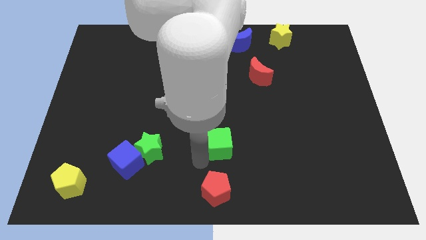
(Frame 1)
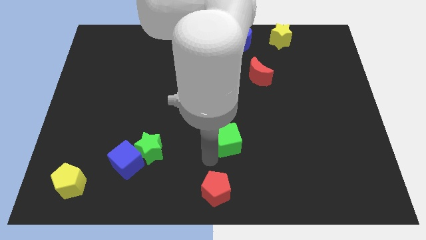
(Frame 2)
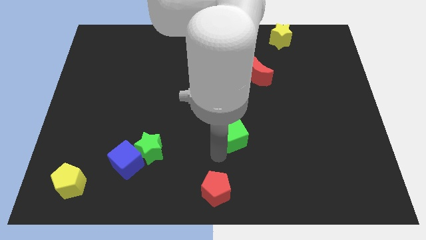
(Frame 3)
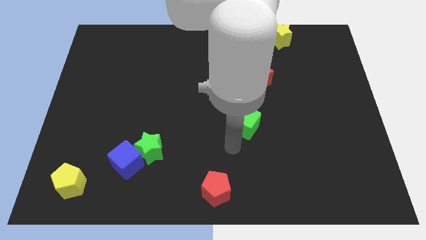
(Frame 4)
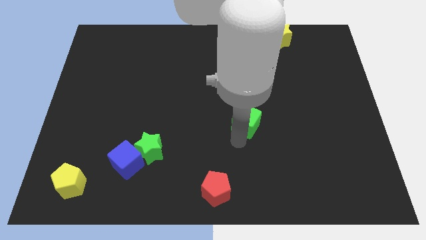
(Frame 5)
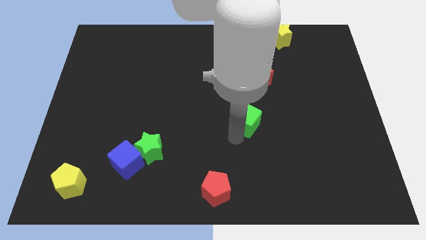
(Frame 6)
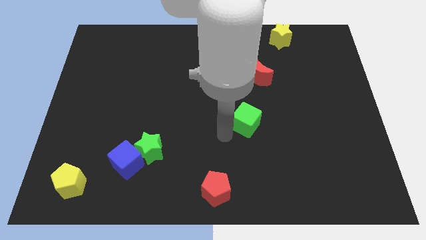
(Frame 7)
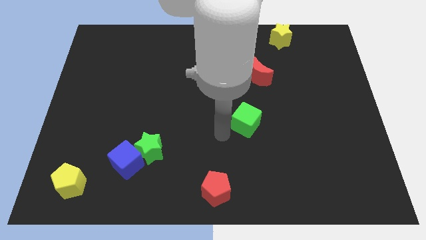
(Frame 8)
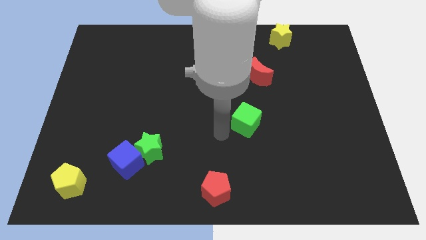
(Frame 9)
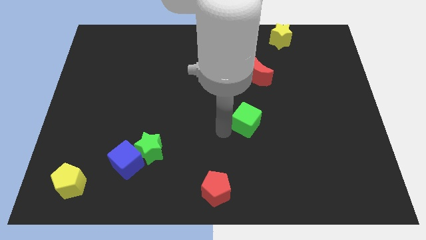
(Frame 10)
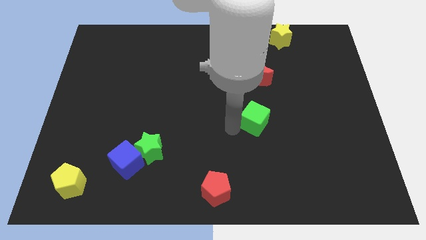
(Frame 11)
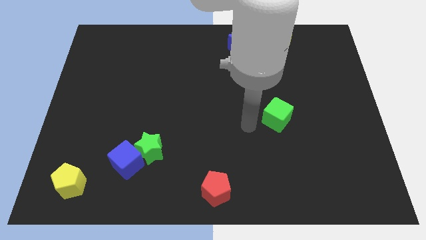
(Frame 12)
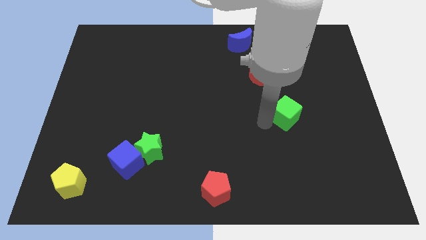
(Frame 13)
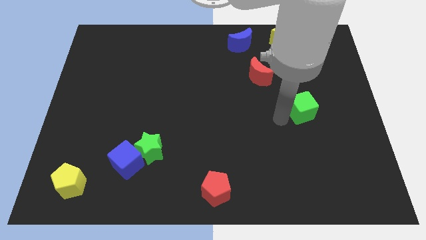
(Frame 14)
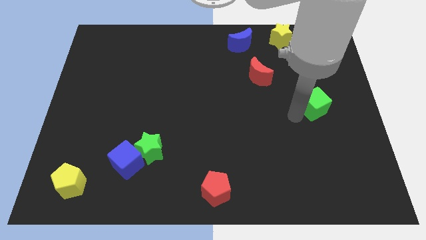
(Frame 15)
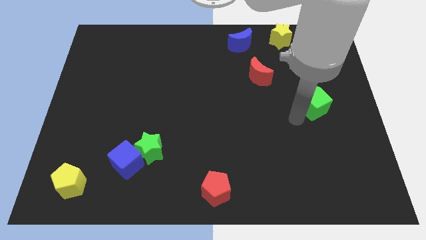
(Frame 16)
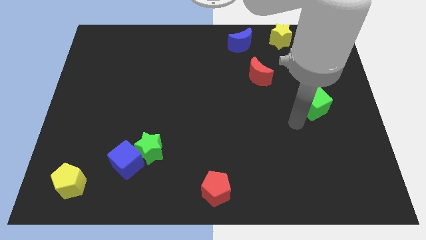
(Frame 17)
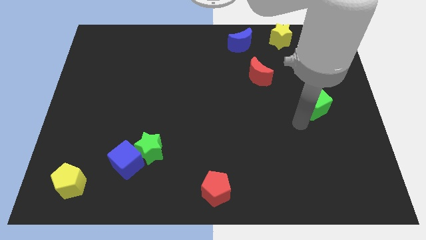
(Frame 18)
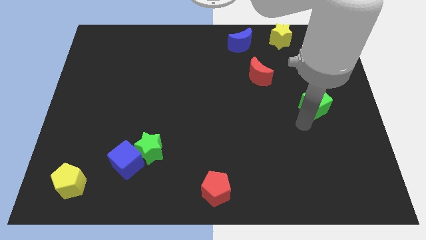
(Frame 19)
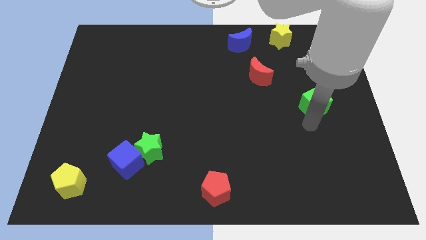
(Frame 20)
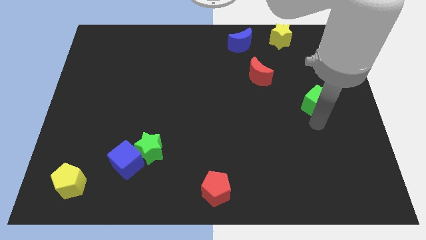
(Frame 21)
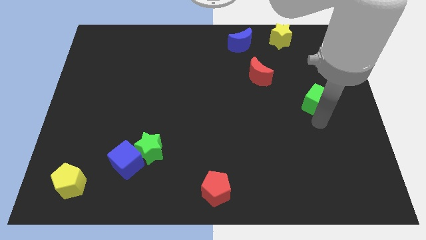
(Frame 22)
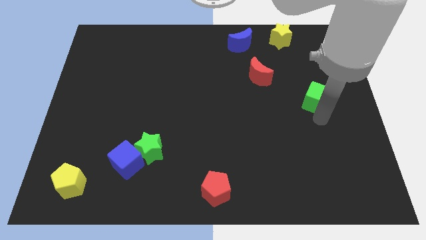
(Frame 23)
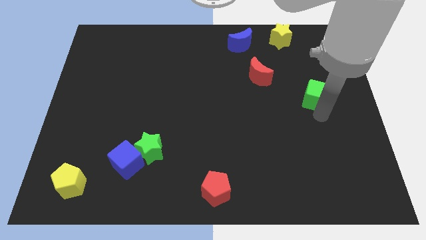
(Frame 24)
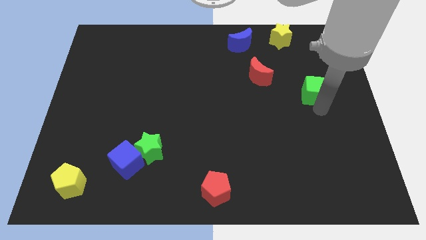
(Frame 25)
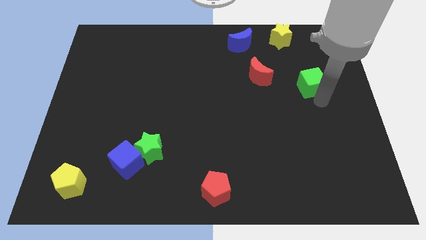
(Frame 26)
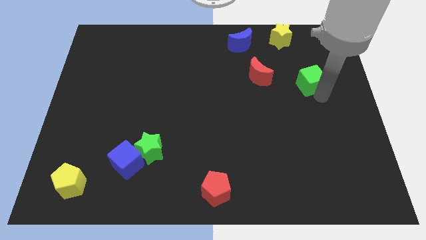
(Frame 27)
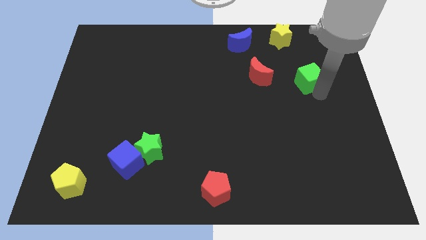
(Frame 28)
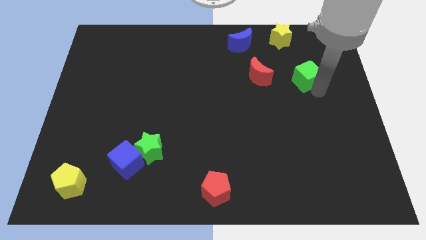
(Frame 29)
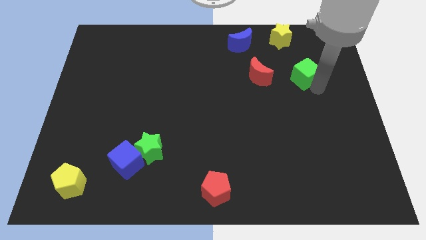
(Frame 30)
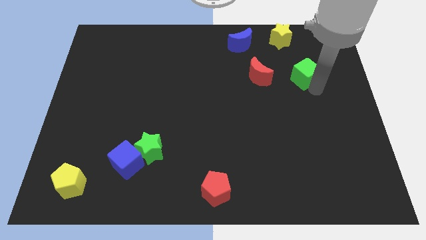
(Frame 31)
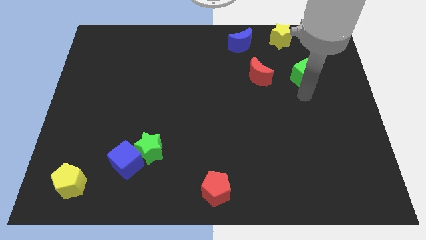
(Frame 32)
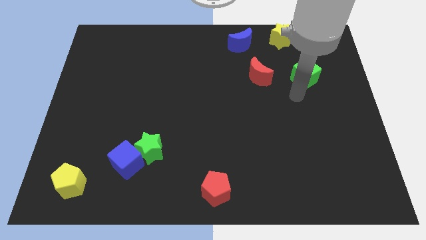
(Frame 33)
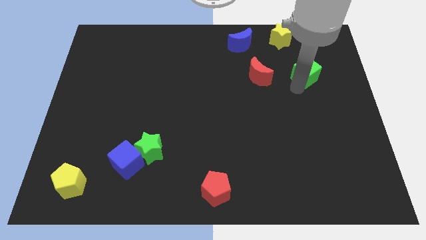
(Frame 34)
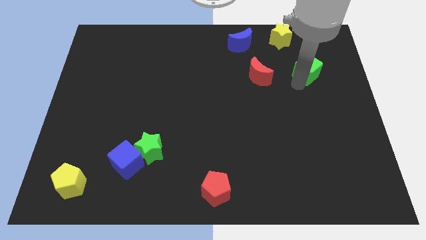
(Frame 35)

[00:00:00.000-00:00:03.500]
put the green cube to the right side of the red moon

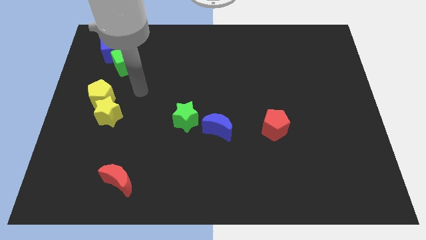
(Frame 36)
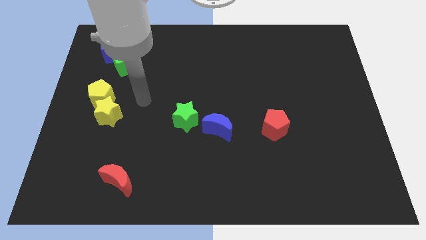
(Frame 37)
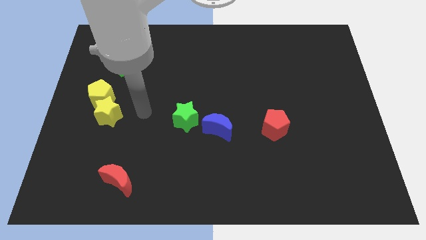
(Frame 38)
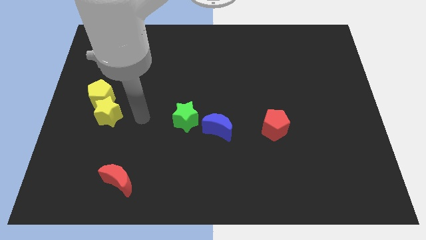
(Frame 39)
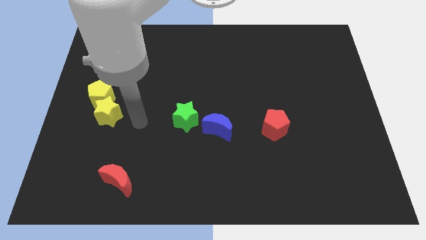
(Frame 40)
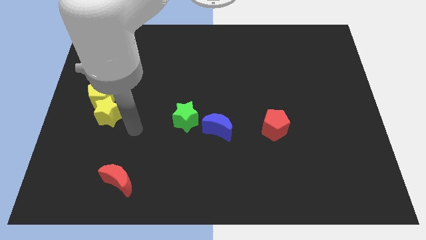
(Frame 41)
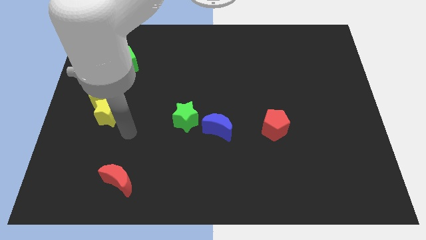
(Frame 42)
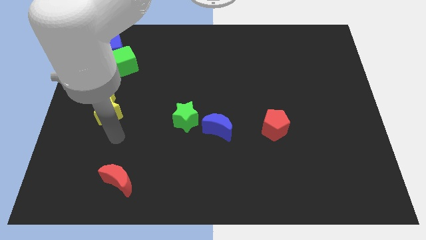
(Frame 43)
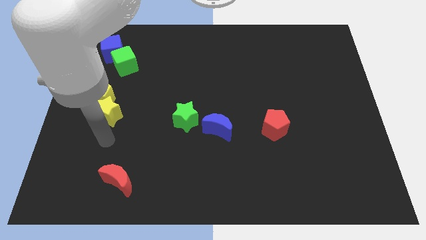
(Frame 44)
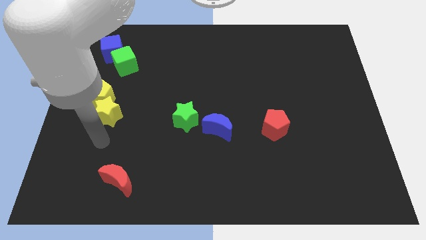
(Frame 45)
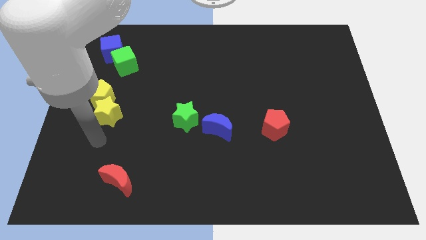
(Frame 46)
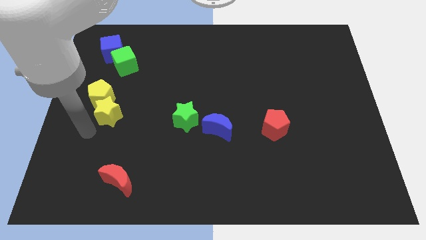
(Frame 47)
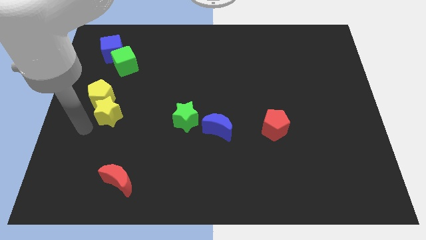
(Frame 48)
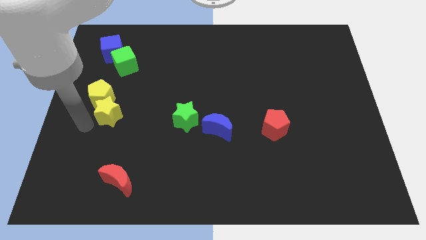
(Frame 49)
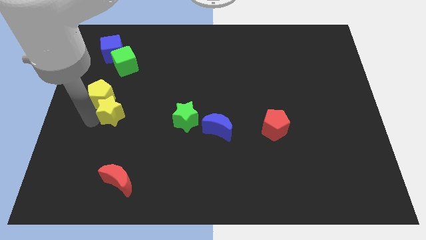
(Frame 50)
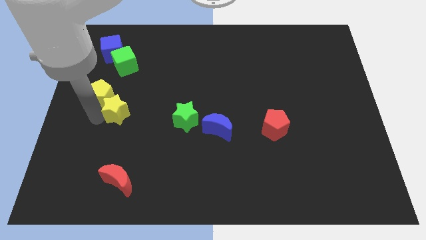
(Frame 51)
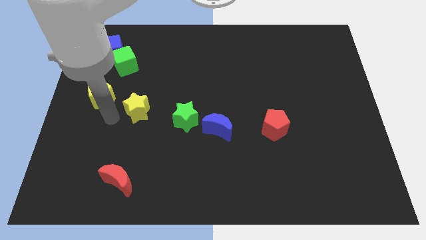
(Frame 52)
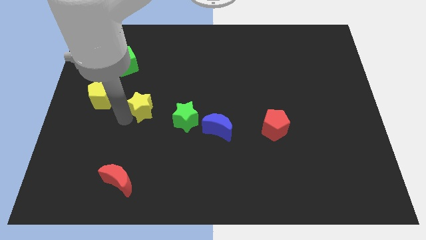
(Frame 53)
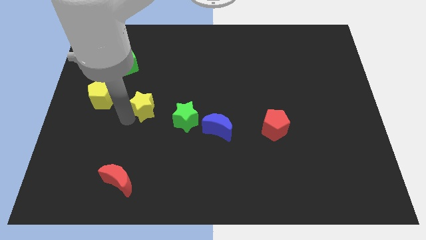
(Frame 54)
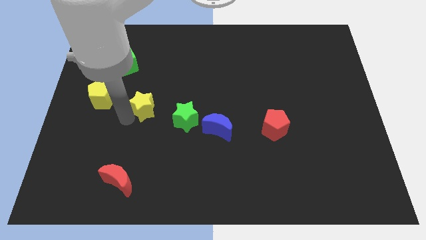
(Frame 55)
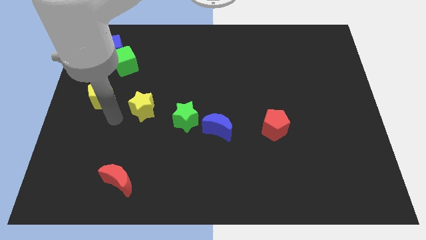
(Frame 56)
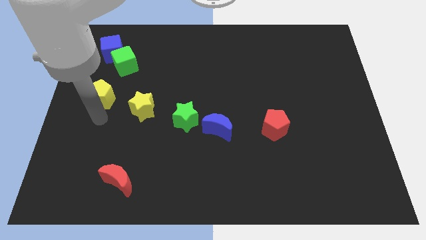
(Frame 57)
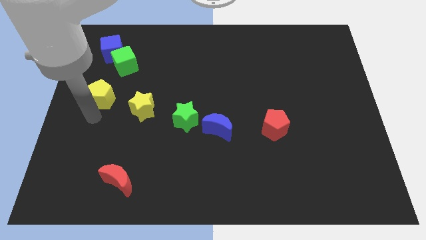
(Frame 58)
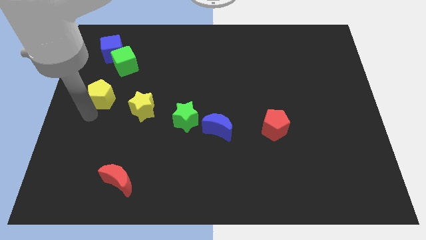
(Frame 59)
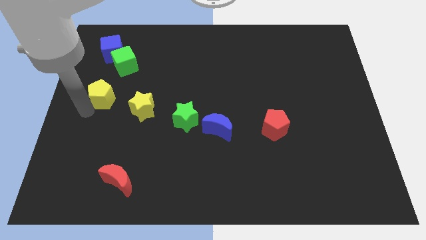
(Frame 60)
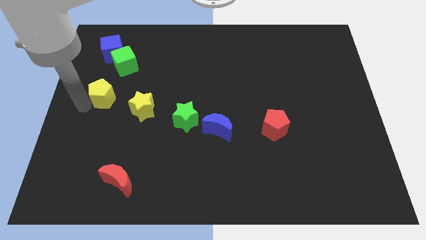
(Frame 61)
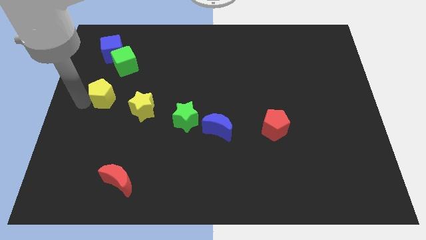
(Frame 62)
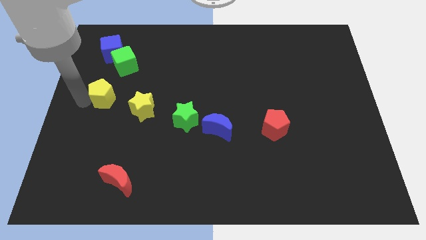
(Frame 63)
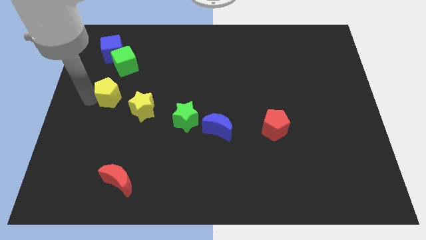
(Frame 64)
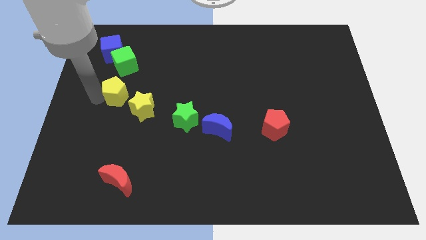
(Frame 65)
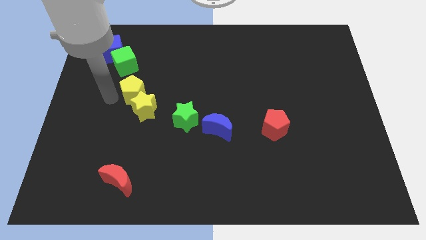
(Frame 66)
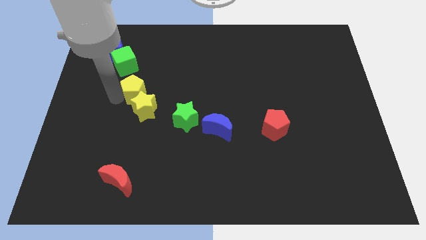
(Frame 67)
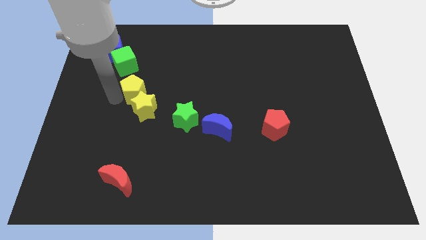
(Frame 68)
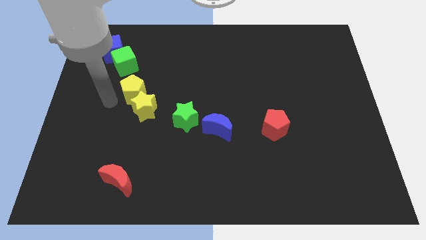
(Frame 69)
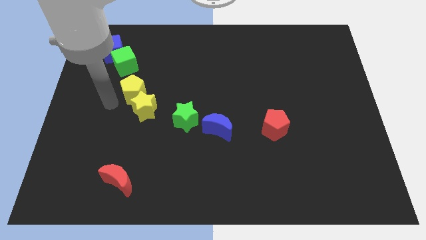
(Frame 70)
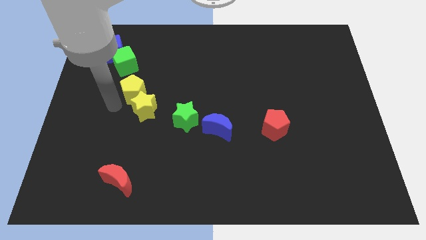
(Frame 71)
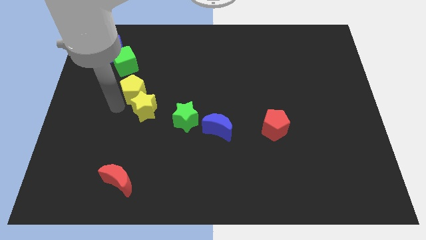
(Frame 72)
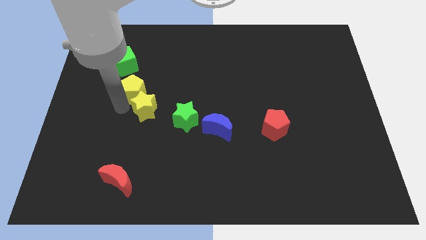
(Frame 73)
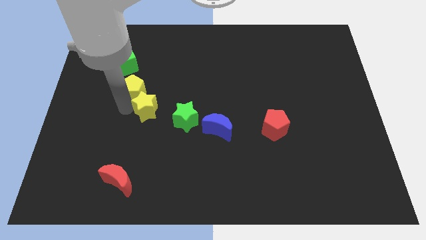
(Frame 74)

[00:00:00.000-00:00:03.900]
place the yellow blocks between green blocks

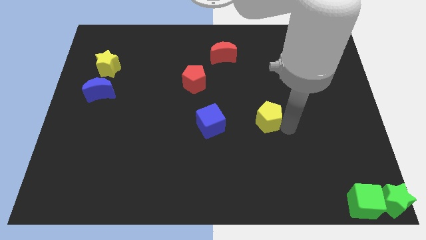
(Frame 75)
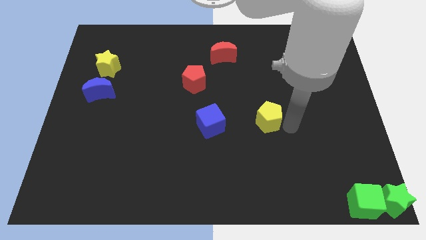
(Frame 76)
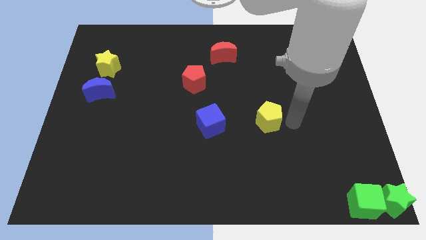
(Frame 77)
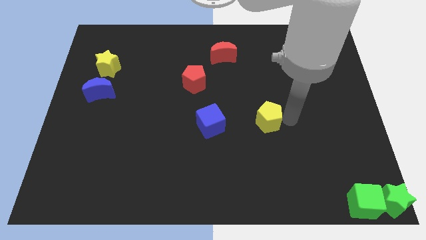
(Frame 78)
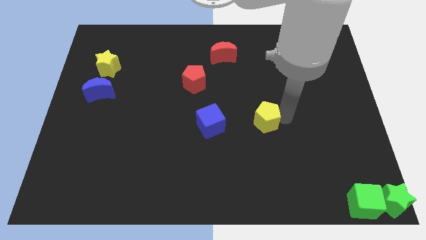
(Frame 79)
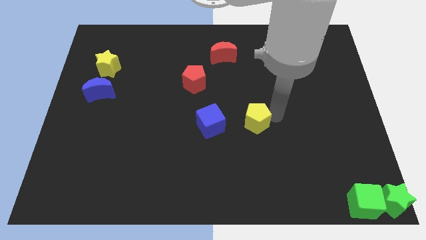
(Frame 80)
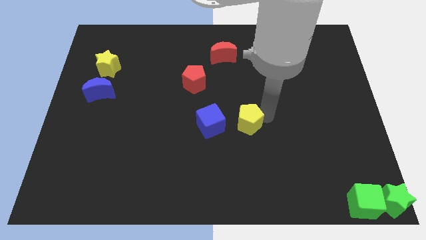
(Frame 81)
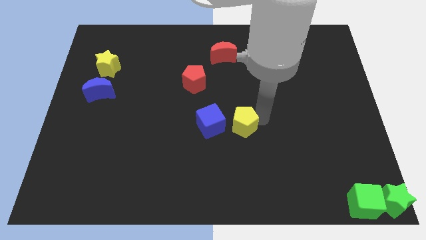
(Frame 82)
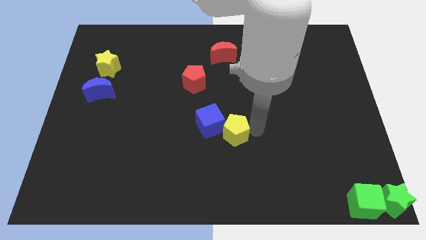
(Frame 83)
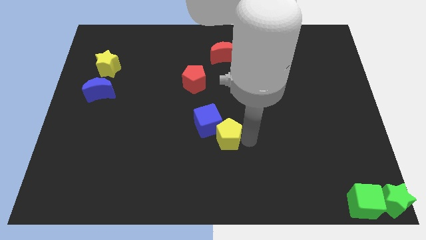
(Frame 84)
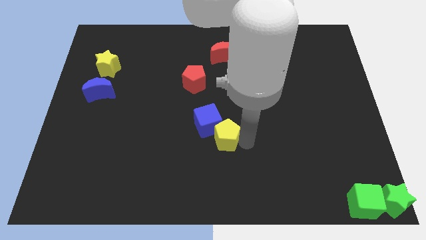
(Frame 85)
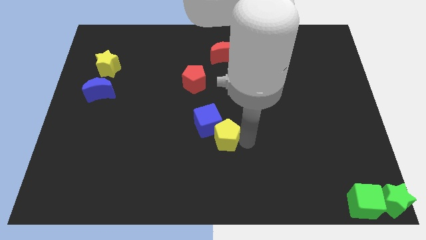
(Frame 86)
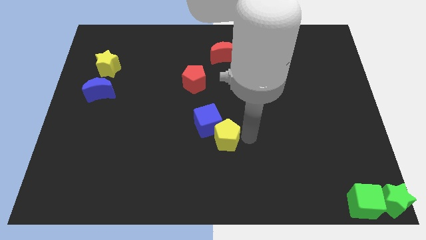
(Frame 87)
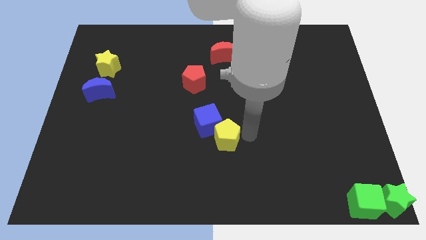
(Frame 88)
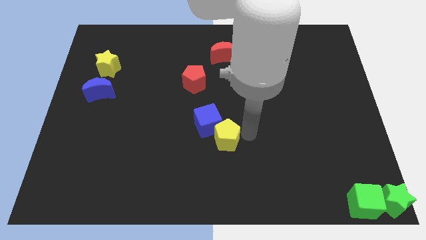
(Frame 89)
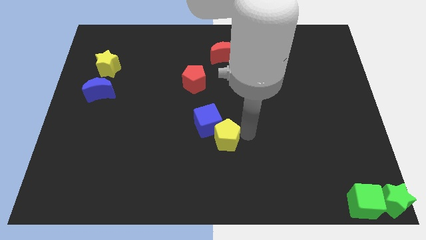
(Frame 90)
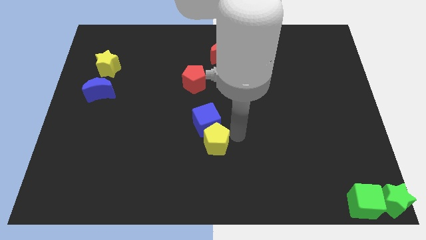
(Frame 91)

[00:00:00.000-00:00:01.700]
move the yellow pentagon into blue cube
